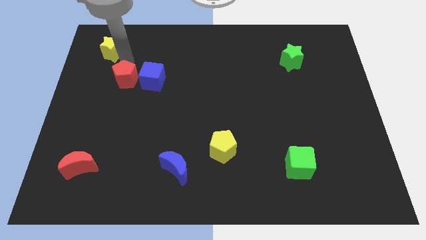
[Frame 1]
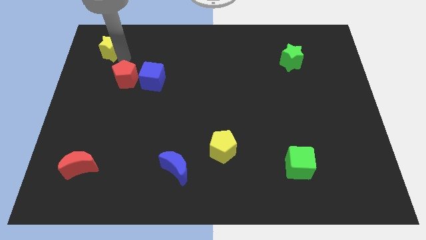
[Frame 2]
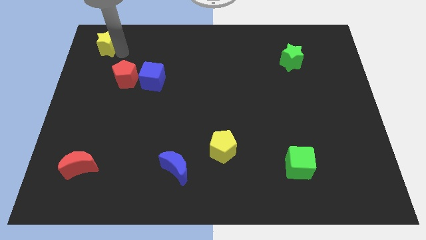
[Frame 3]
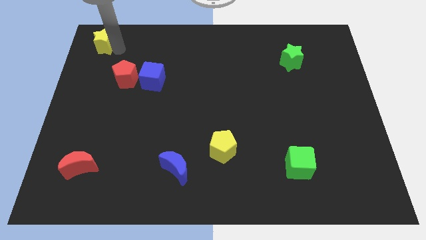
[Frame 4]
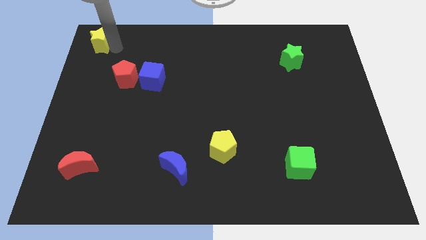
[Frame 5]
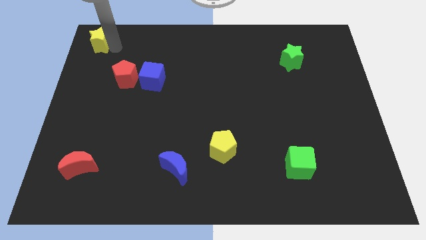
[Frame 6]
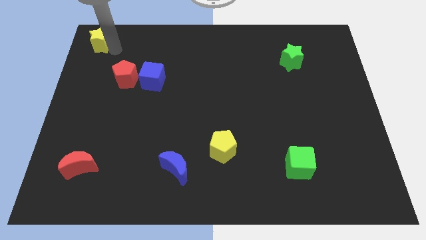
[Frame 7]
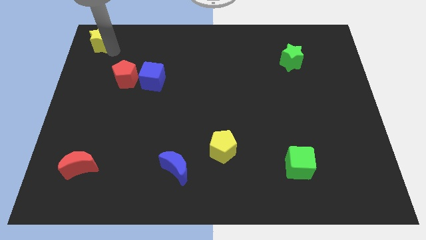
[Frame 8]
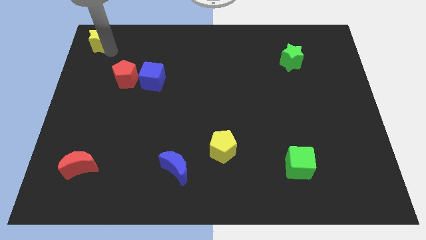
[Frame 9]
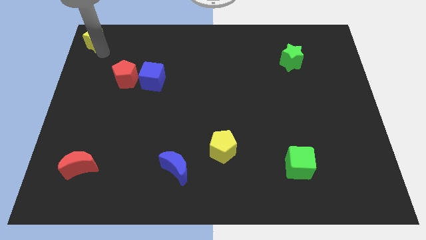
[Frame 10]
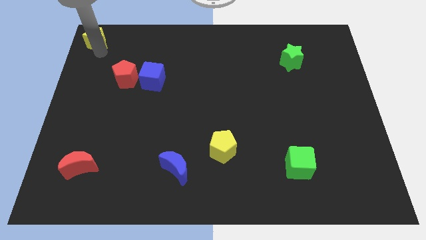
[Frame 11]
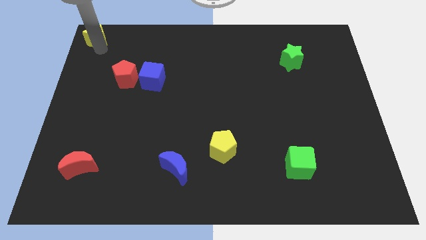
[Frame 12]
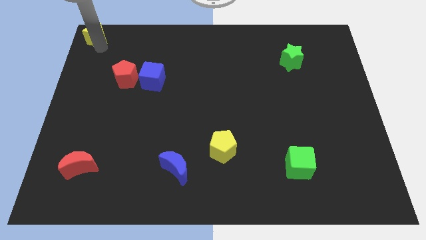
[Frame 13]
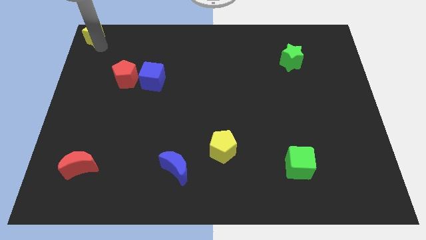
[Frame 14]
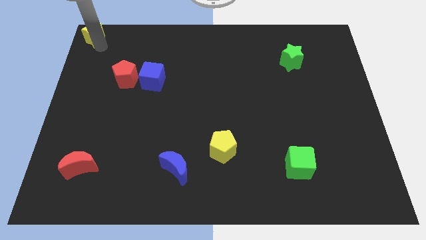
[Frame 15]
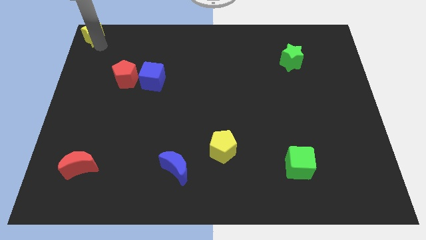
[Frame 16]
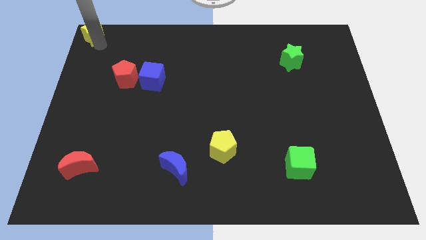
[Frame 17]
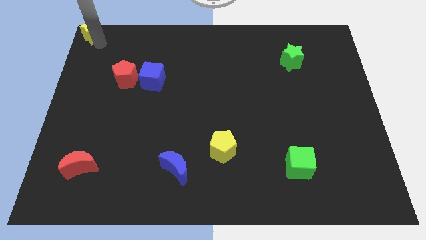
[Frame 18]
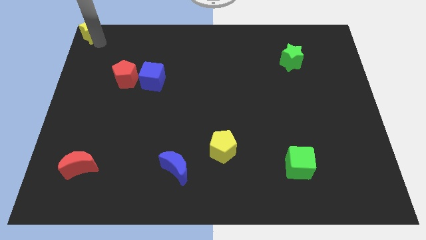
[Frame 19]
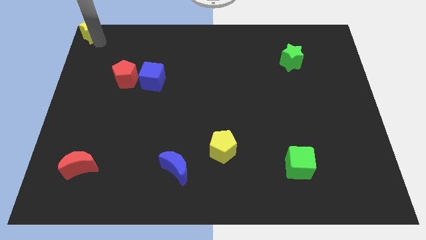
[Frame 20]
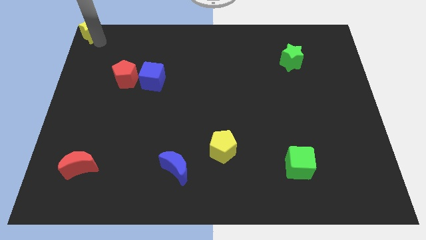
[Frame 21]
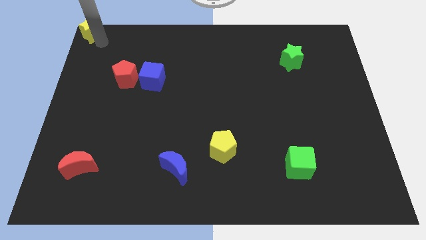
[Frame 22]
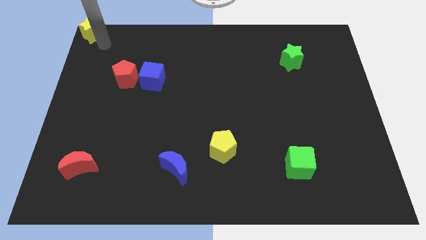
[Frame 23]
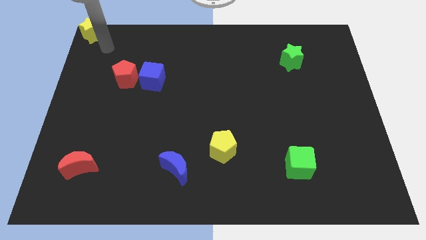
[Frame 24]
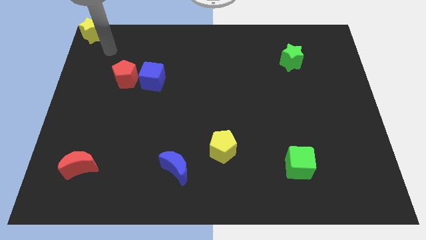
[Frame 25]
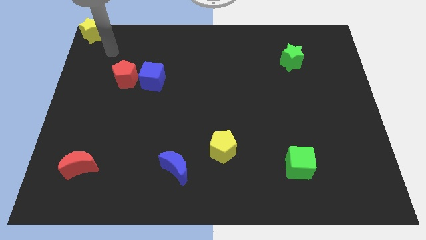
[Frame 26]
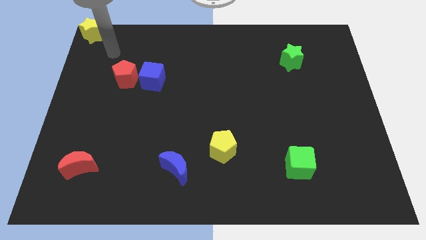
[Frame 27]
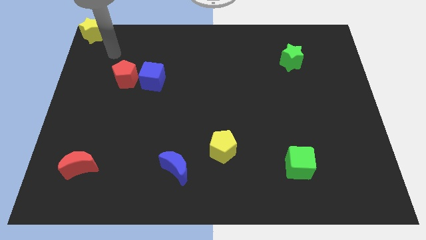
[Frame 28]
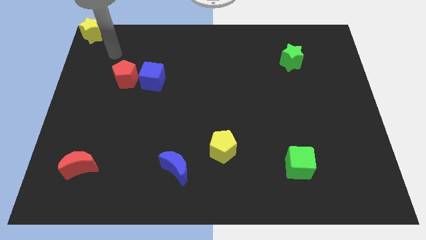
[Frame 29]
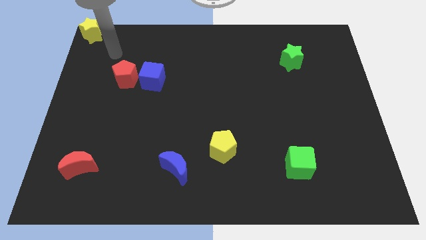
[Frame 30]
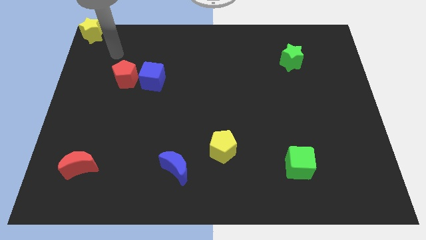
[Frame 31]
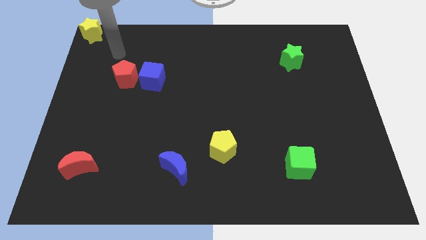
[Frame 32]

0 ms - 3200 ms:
place yellow star to the top left corner of the board

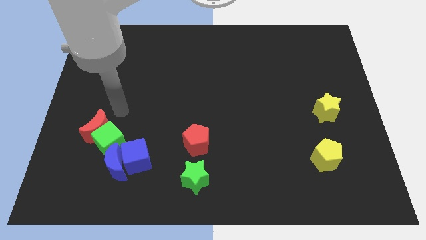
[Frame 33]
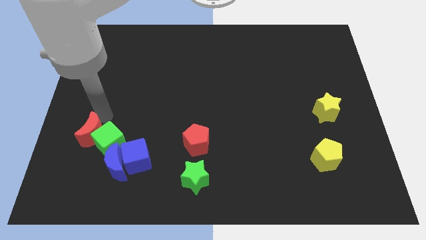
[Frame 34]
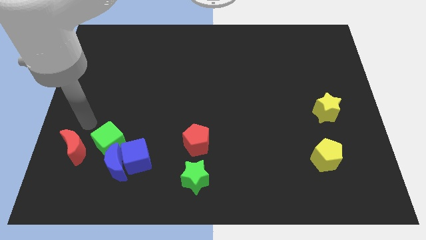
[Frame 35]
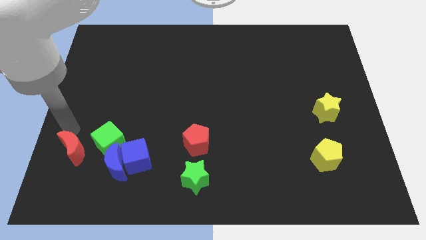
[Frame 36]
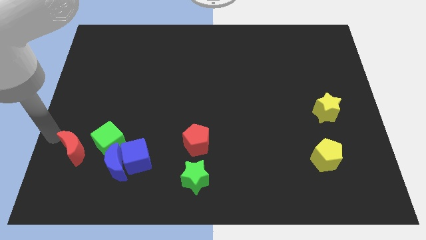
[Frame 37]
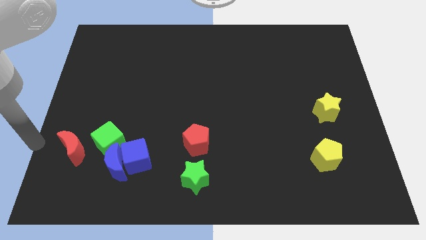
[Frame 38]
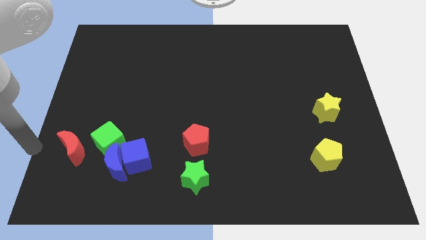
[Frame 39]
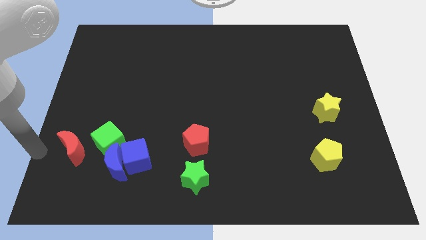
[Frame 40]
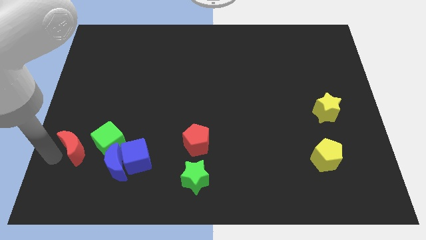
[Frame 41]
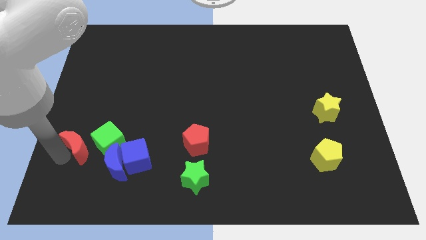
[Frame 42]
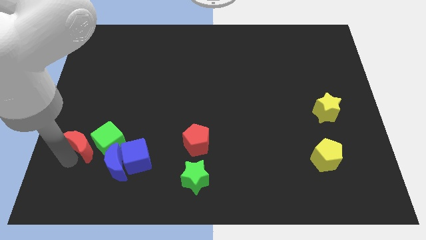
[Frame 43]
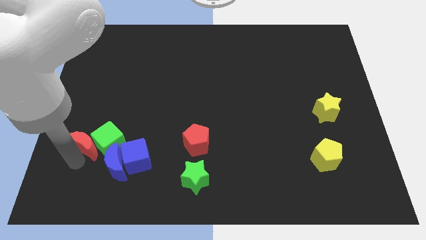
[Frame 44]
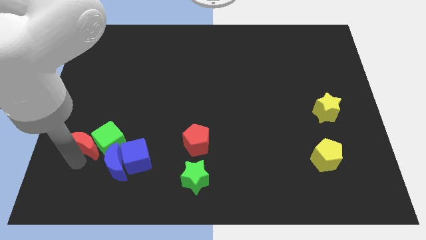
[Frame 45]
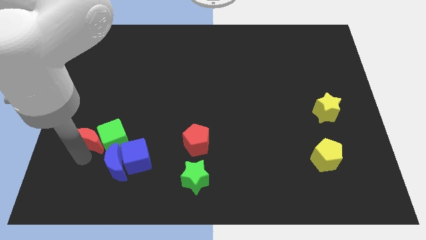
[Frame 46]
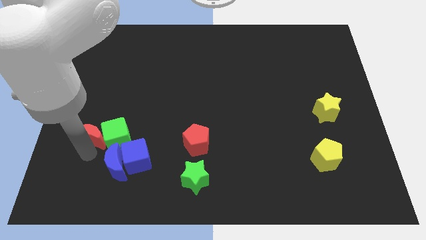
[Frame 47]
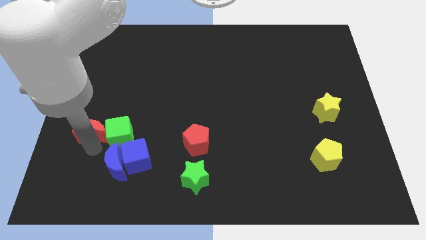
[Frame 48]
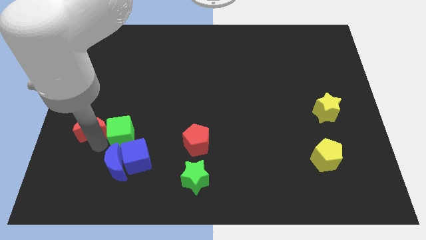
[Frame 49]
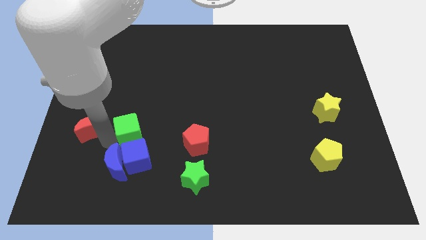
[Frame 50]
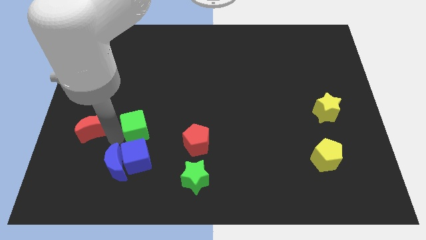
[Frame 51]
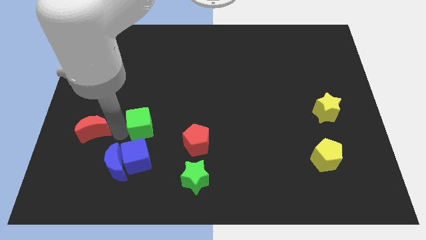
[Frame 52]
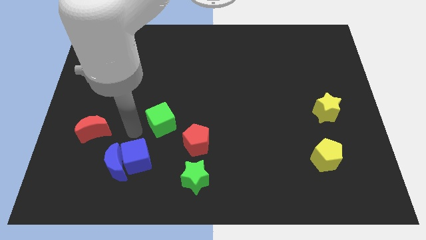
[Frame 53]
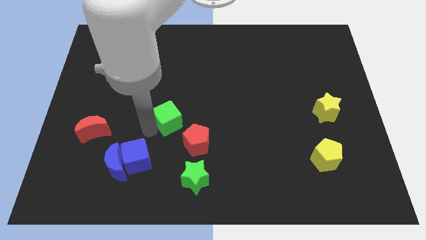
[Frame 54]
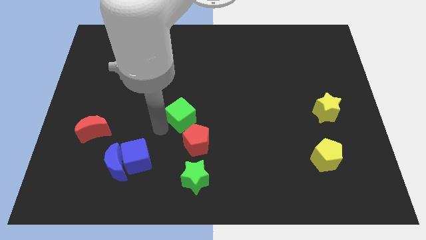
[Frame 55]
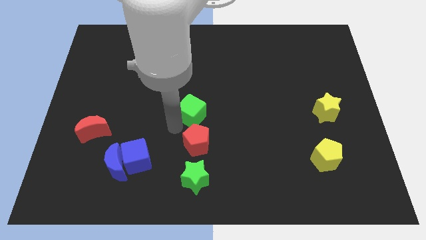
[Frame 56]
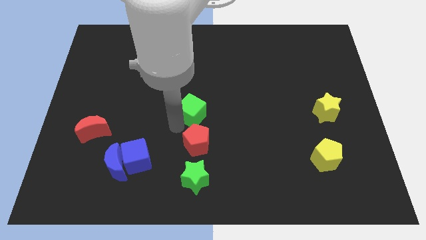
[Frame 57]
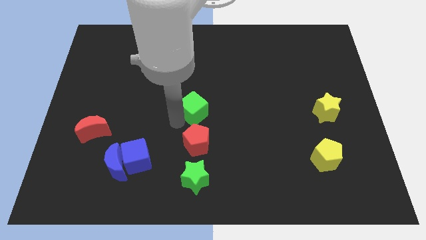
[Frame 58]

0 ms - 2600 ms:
push green cube above red pentagon

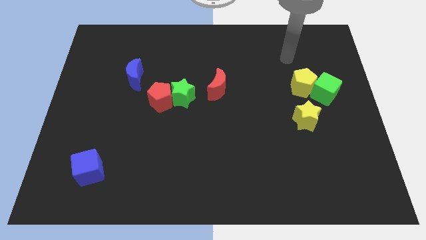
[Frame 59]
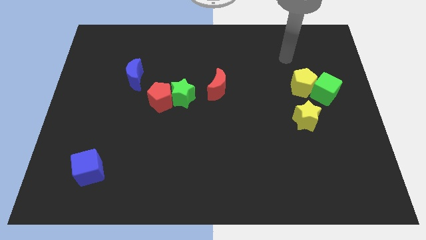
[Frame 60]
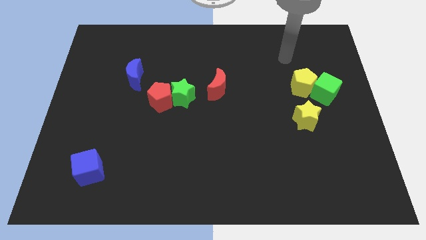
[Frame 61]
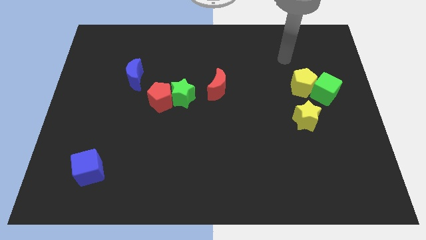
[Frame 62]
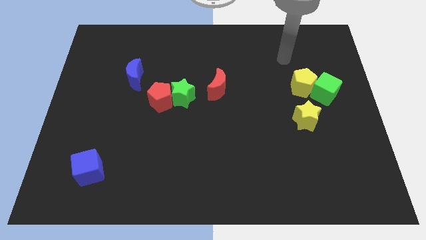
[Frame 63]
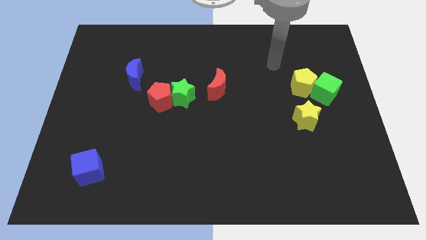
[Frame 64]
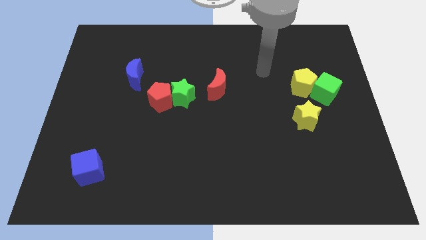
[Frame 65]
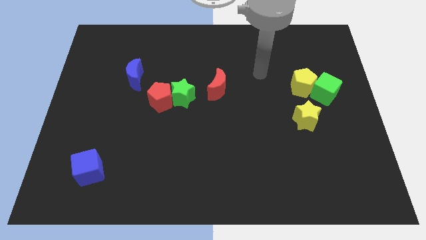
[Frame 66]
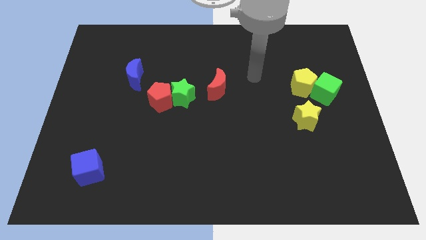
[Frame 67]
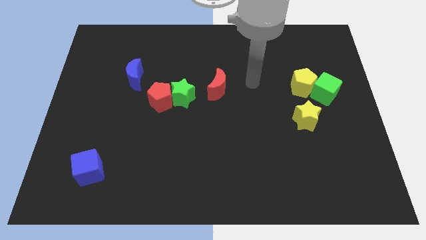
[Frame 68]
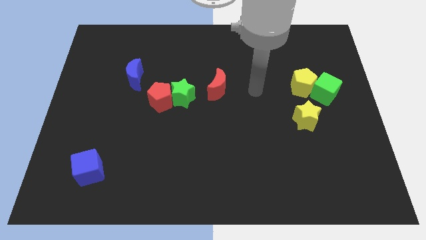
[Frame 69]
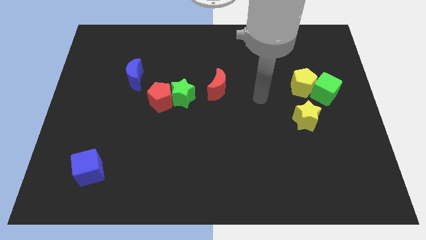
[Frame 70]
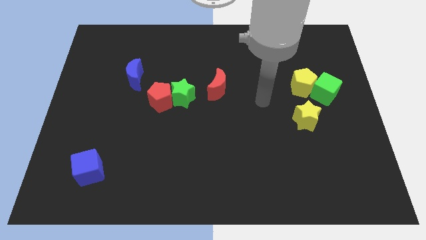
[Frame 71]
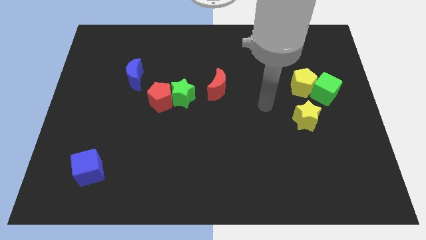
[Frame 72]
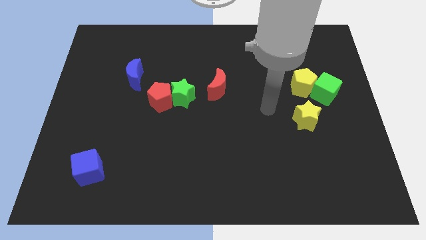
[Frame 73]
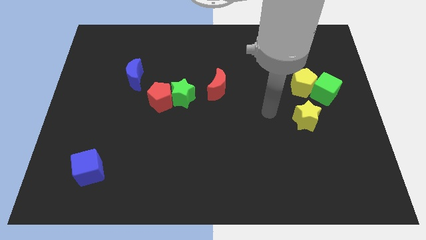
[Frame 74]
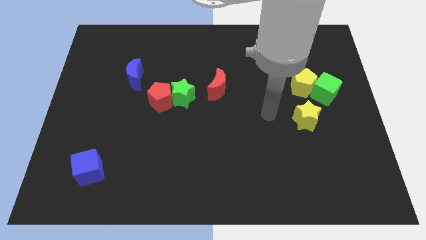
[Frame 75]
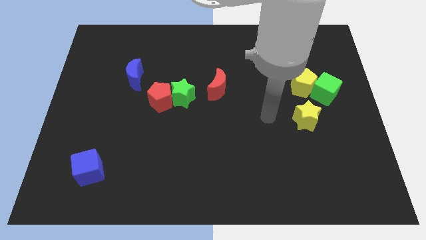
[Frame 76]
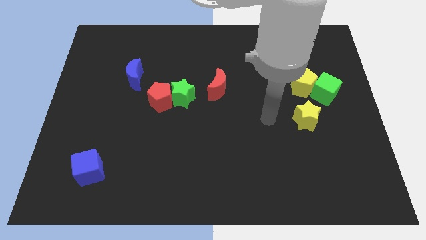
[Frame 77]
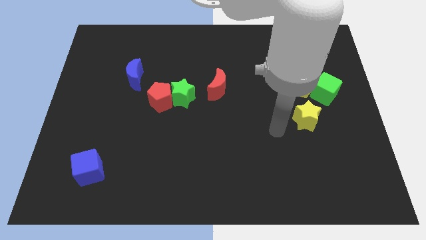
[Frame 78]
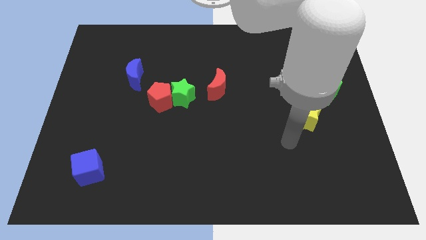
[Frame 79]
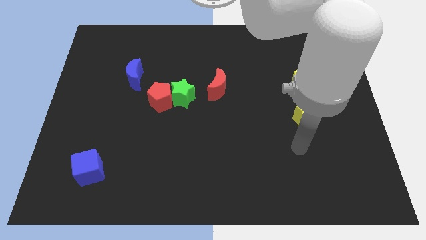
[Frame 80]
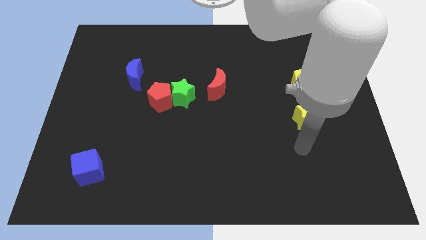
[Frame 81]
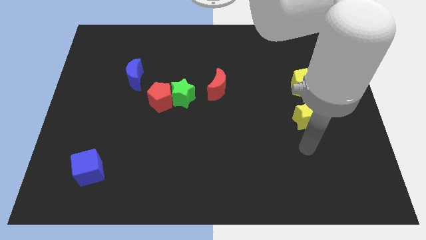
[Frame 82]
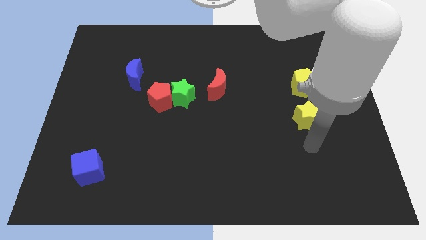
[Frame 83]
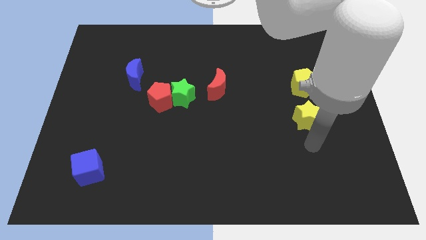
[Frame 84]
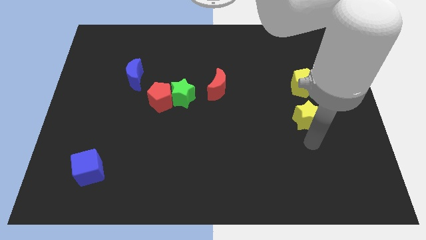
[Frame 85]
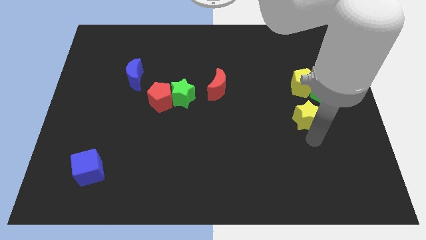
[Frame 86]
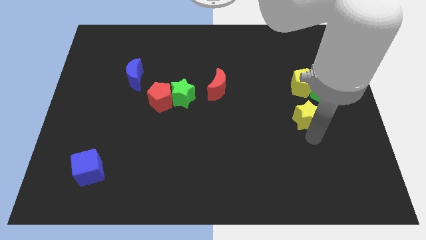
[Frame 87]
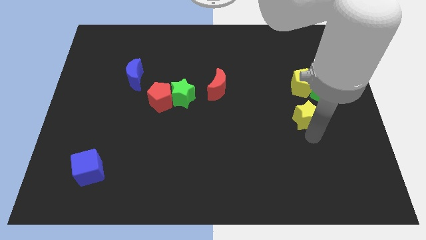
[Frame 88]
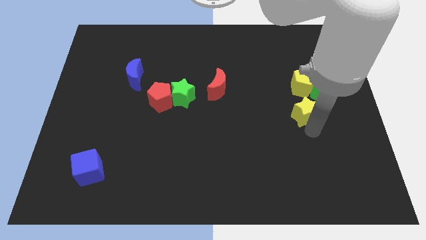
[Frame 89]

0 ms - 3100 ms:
push the yellow star slightly to the top
